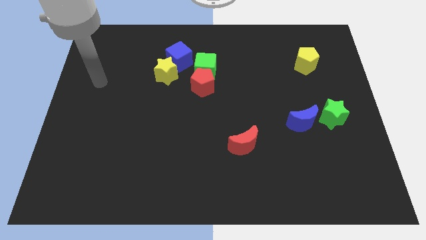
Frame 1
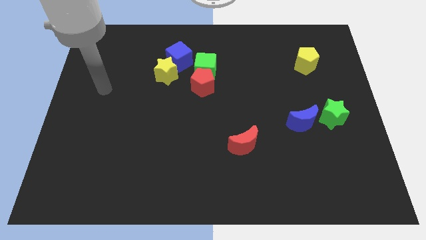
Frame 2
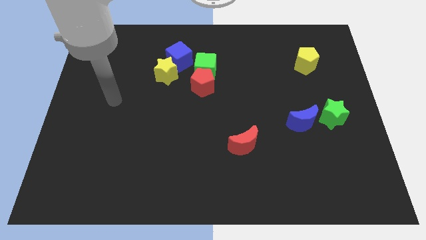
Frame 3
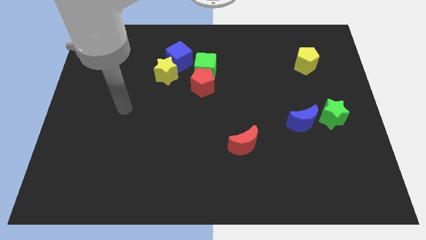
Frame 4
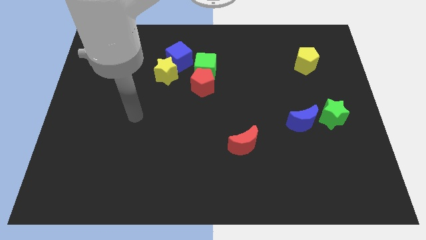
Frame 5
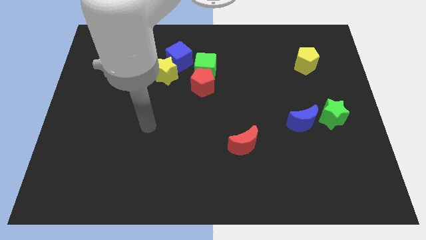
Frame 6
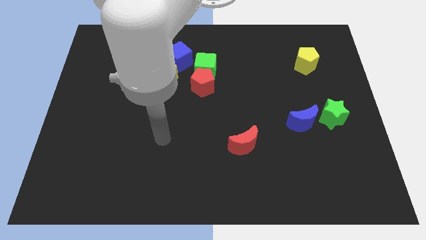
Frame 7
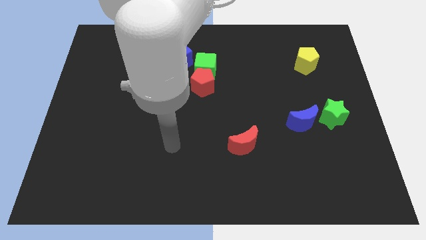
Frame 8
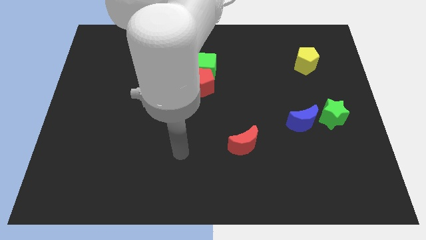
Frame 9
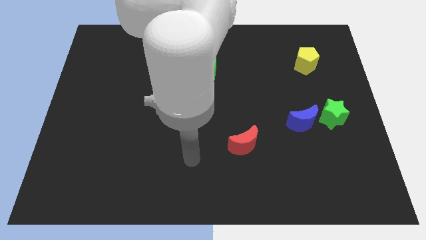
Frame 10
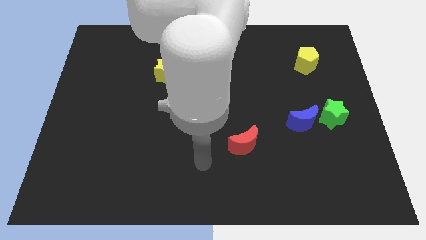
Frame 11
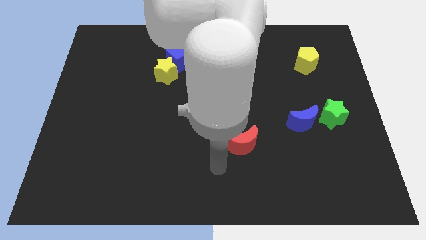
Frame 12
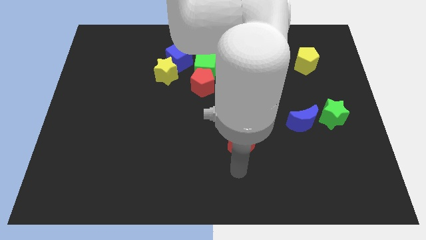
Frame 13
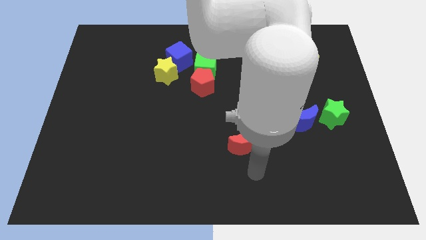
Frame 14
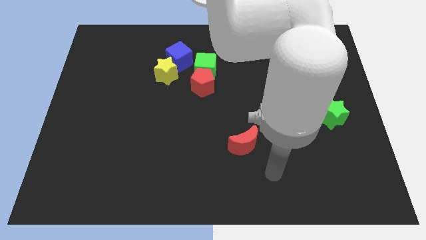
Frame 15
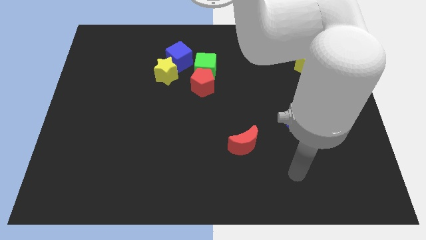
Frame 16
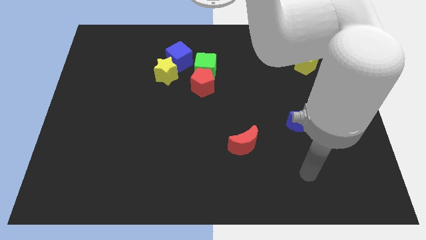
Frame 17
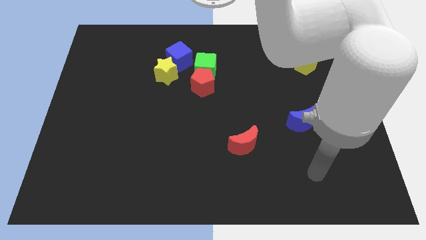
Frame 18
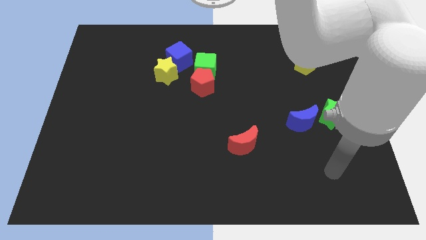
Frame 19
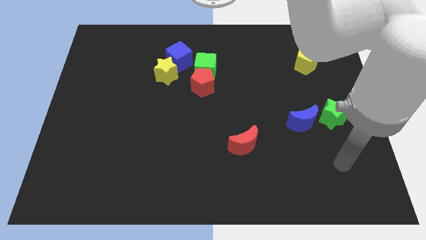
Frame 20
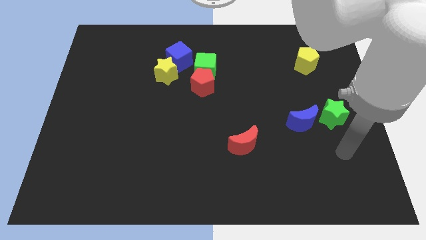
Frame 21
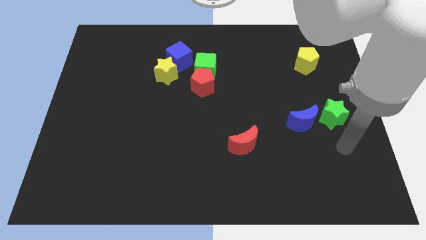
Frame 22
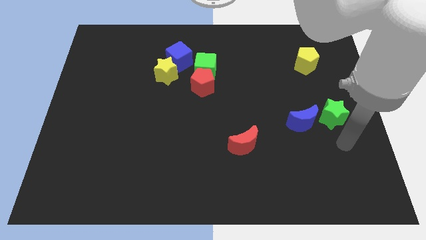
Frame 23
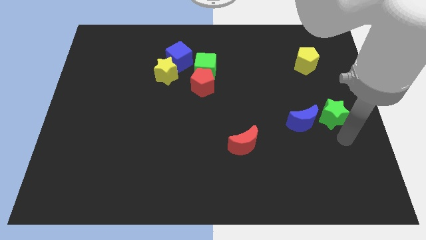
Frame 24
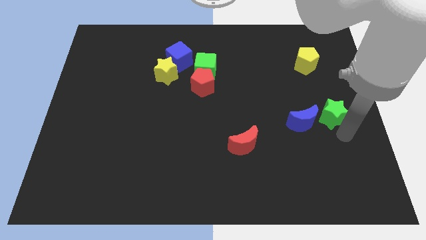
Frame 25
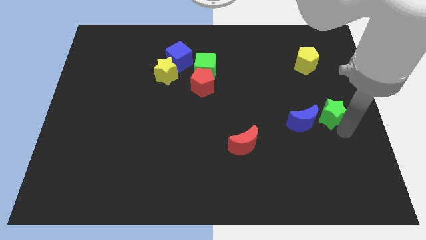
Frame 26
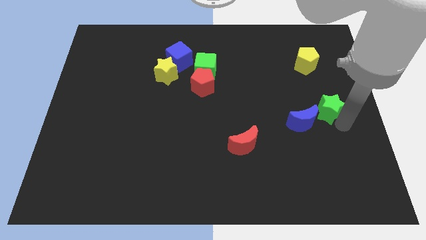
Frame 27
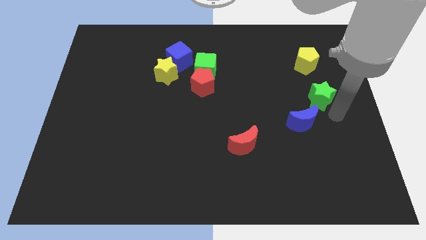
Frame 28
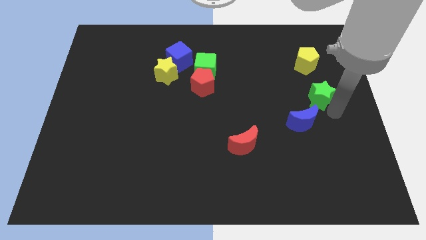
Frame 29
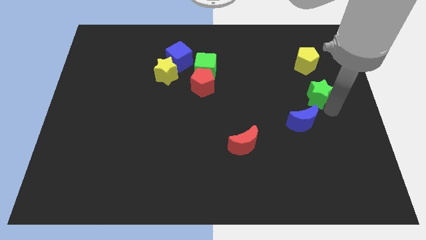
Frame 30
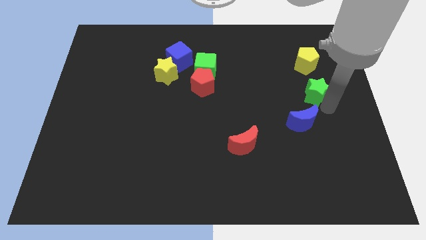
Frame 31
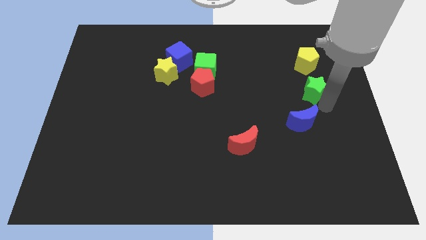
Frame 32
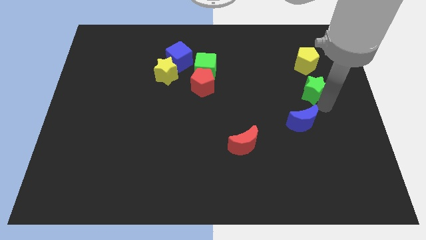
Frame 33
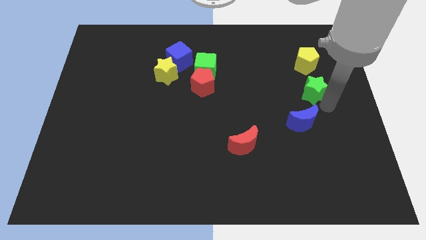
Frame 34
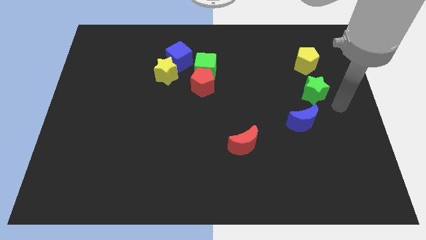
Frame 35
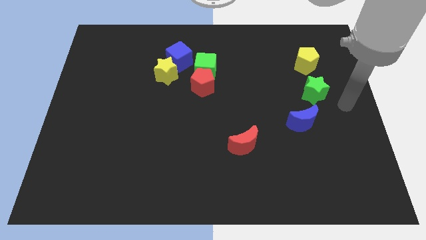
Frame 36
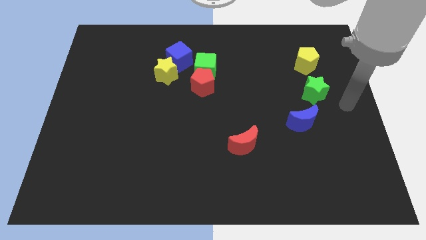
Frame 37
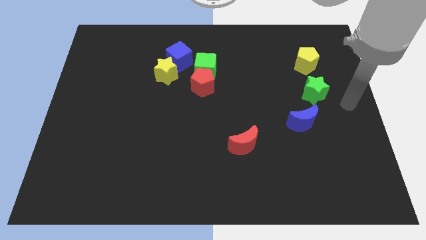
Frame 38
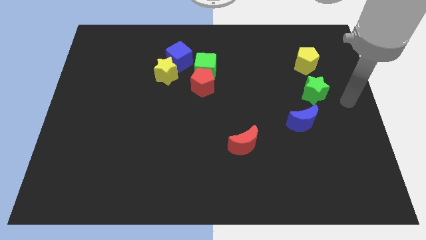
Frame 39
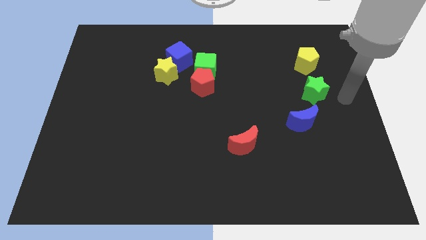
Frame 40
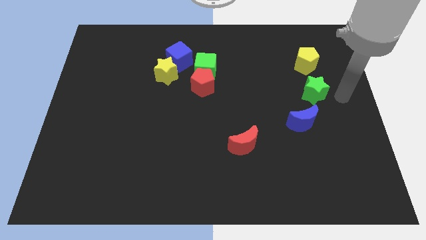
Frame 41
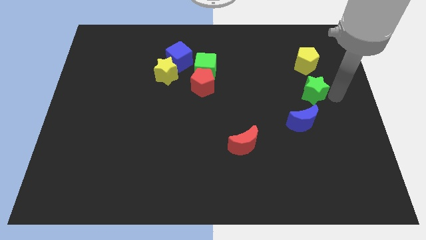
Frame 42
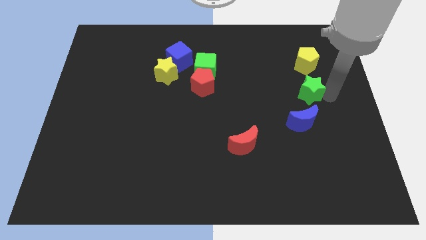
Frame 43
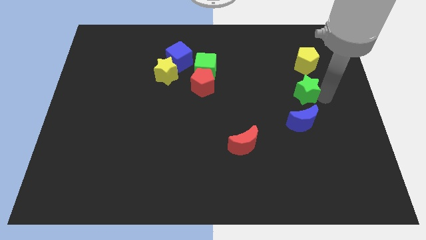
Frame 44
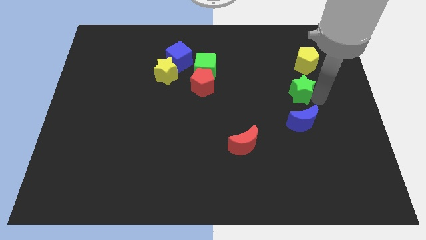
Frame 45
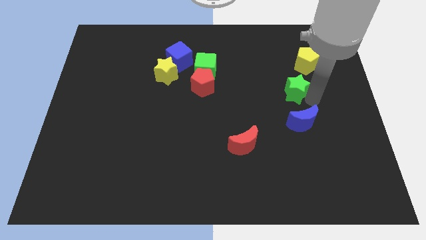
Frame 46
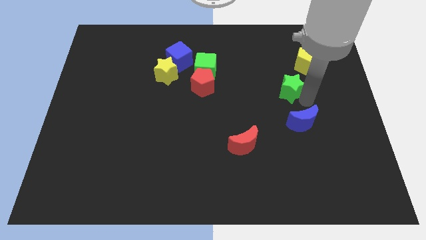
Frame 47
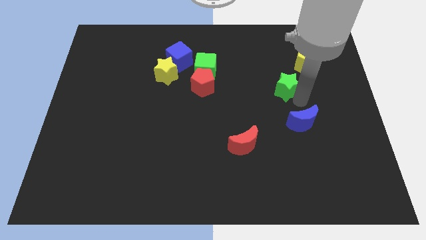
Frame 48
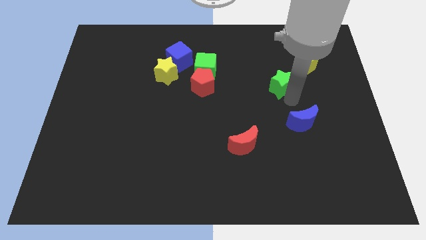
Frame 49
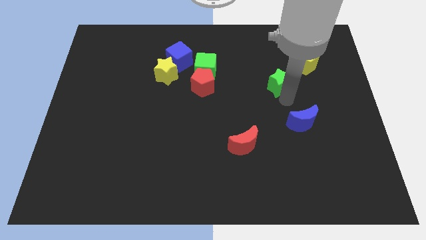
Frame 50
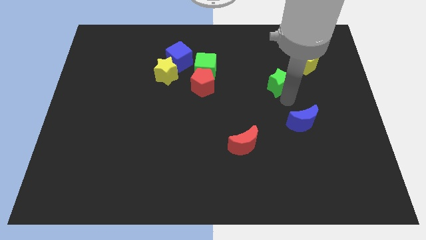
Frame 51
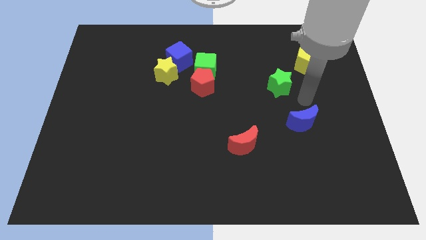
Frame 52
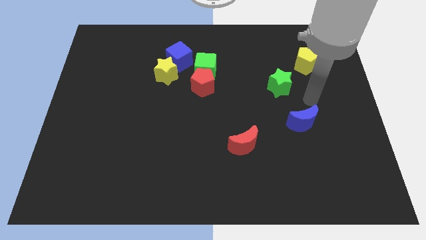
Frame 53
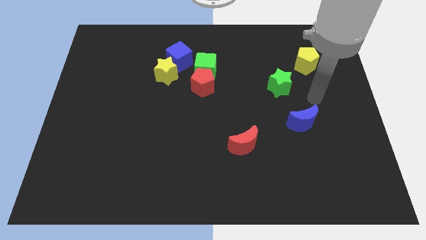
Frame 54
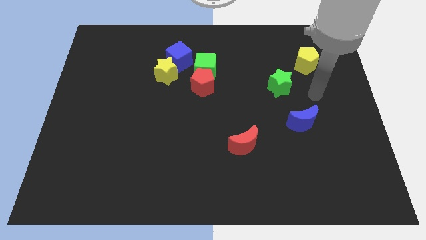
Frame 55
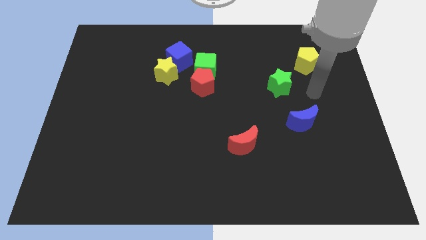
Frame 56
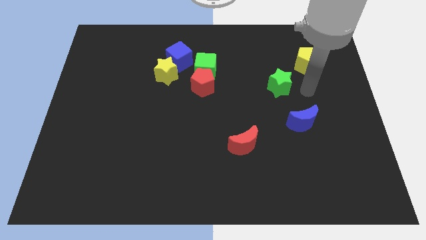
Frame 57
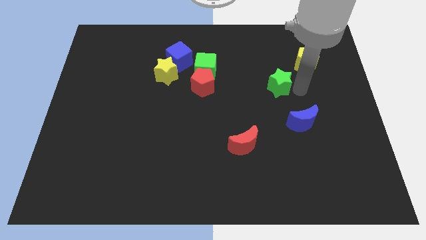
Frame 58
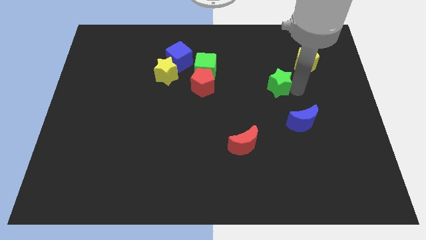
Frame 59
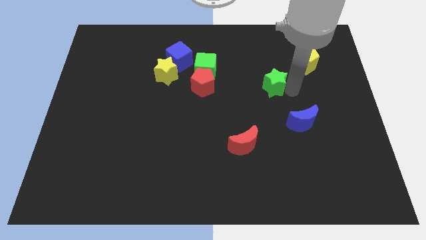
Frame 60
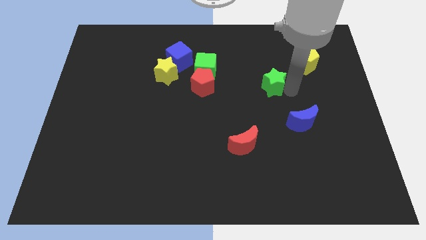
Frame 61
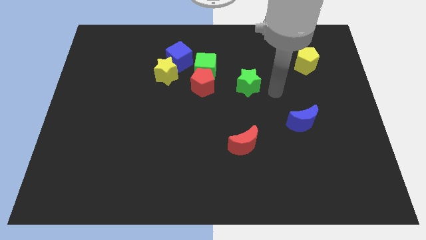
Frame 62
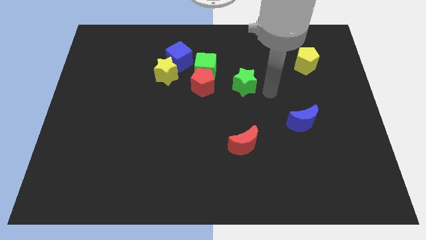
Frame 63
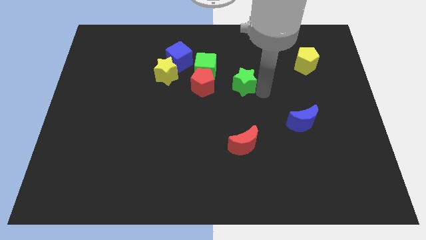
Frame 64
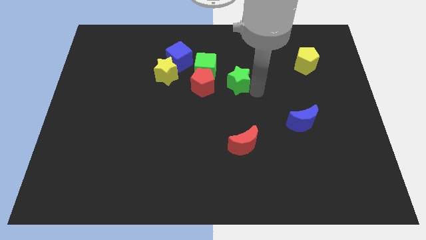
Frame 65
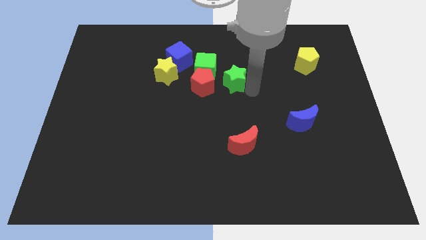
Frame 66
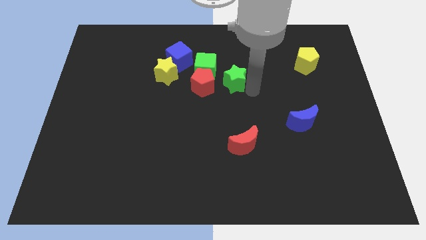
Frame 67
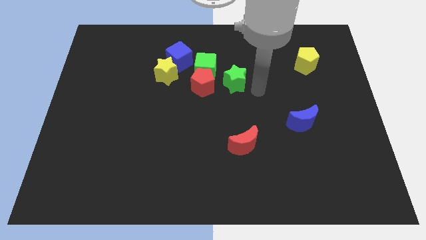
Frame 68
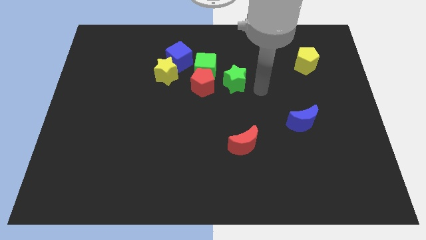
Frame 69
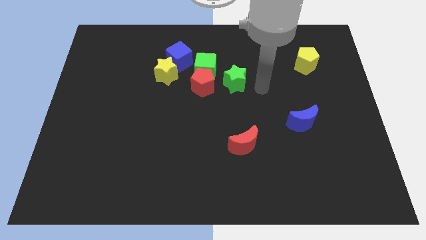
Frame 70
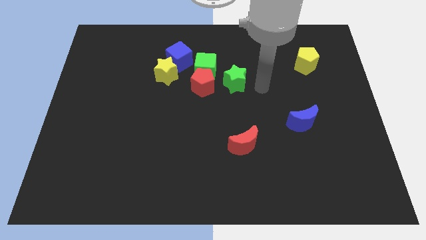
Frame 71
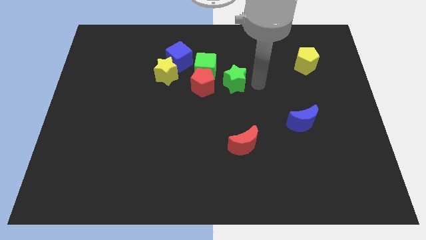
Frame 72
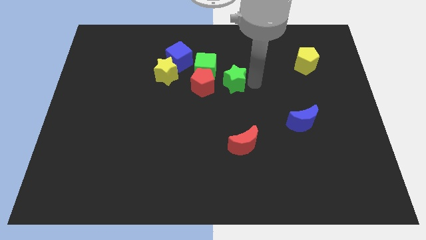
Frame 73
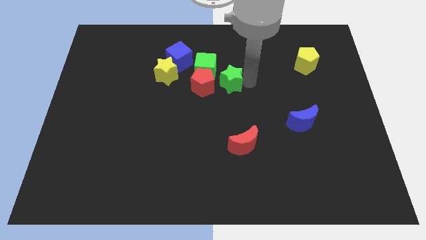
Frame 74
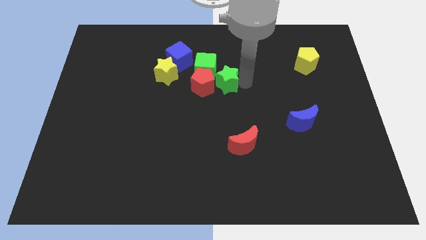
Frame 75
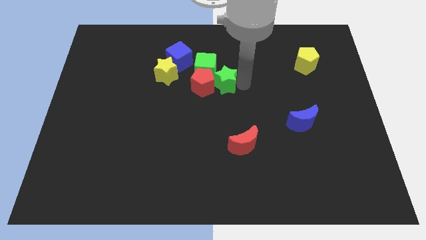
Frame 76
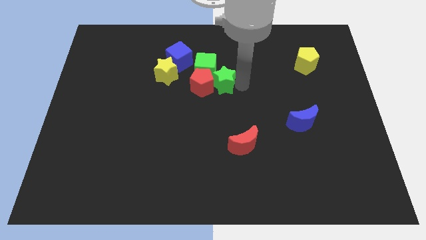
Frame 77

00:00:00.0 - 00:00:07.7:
put the green star next to the red pentagon

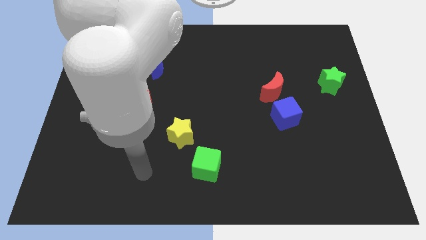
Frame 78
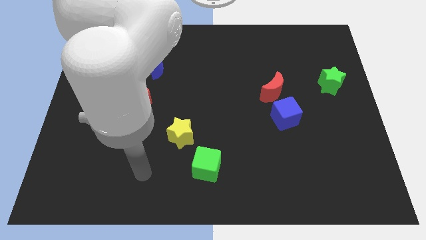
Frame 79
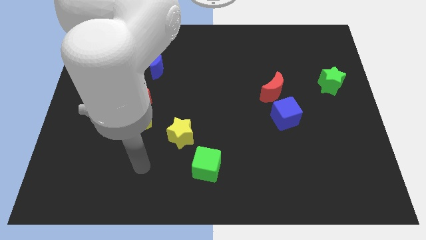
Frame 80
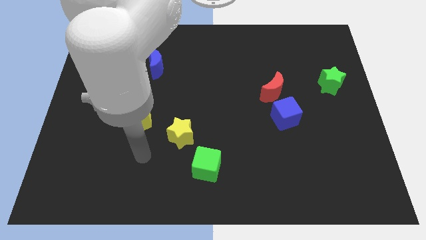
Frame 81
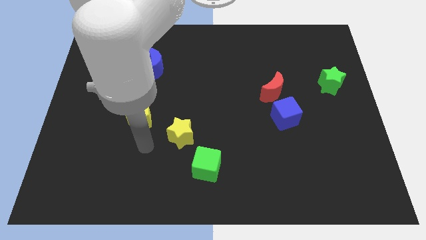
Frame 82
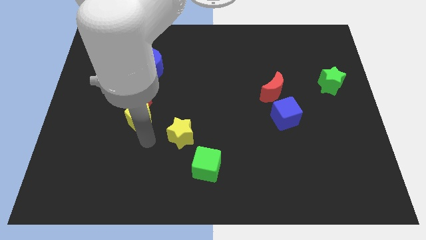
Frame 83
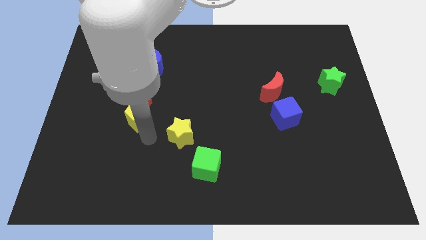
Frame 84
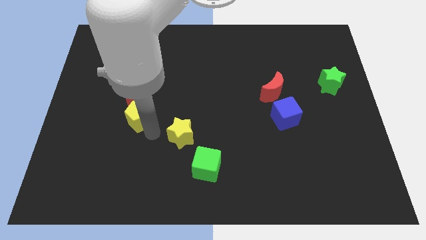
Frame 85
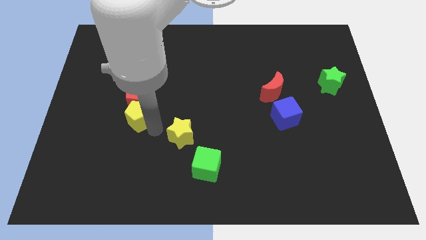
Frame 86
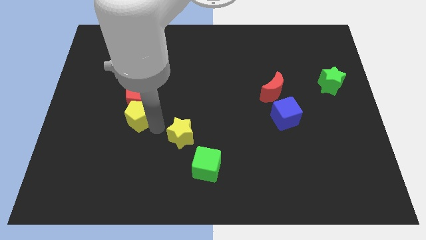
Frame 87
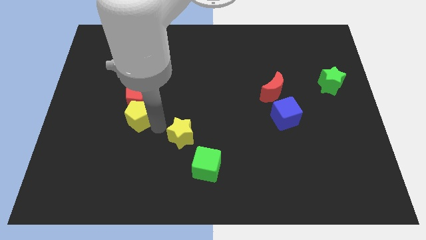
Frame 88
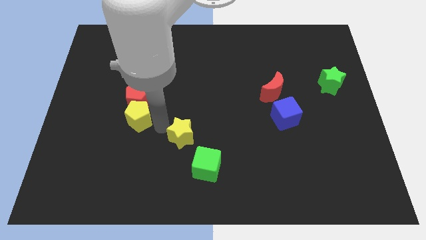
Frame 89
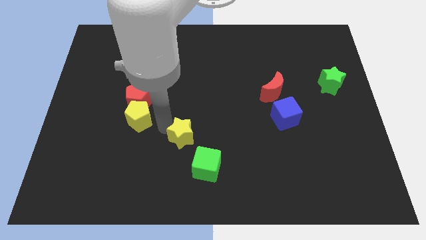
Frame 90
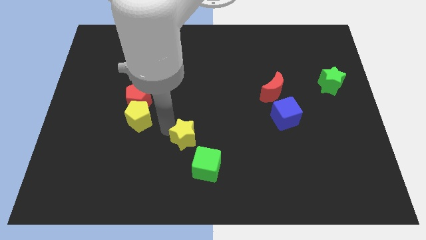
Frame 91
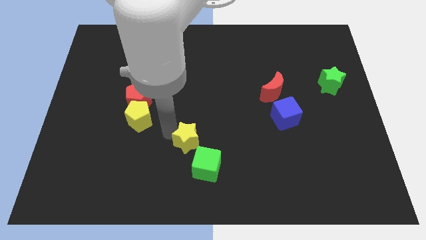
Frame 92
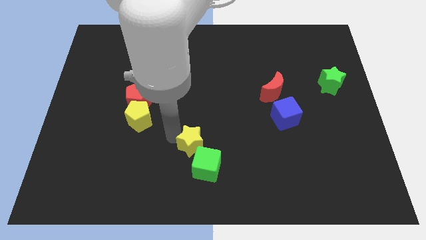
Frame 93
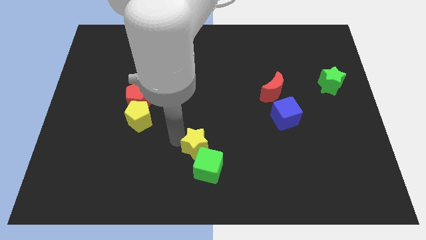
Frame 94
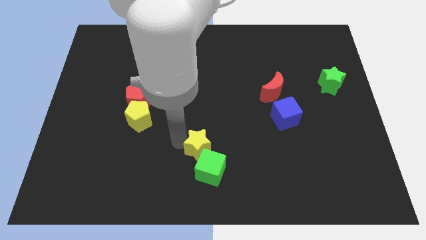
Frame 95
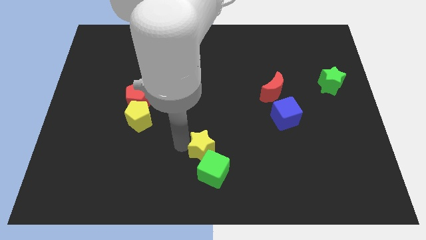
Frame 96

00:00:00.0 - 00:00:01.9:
push the yellow star next to the green cube
